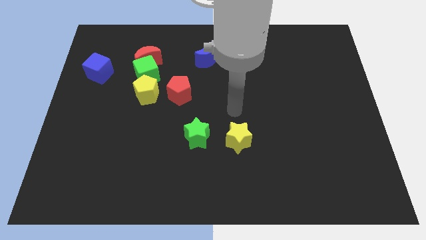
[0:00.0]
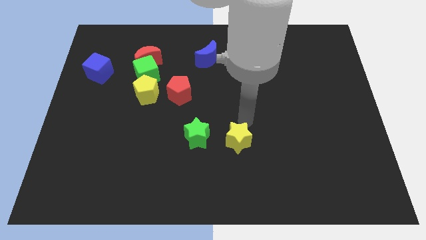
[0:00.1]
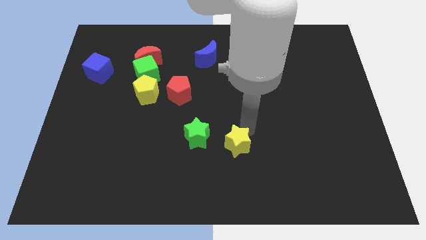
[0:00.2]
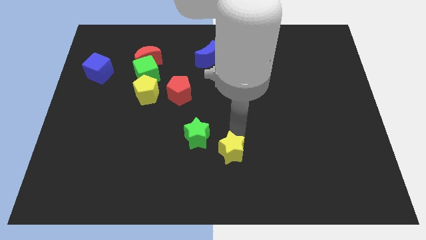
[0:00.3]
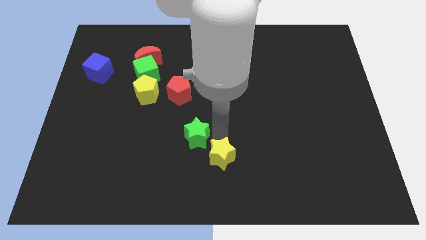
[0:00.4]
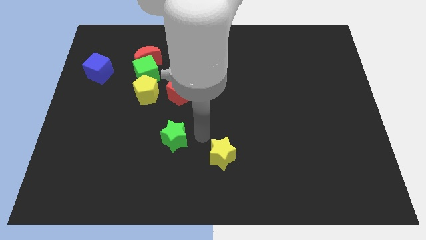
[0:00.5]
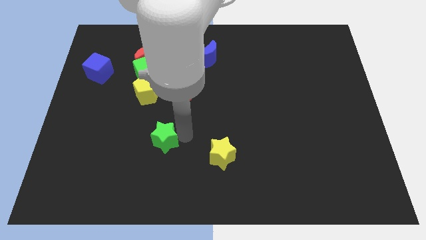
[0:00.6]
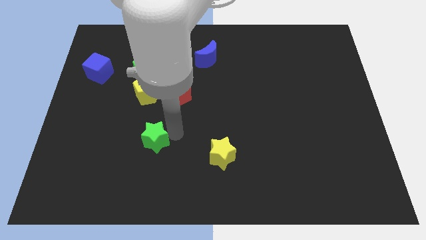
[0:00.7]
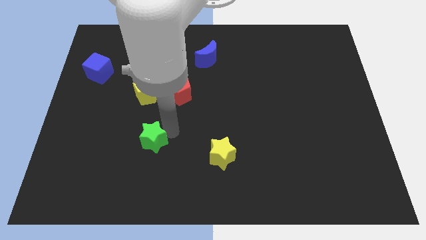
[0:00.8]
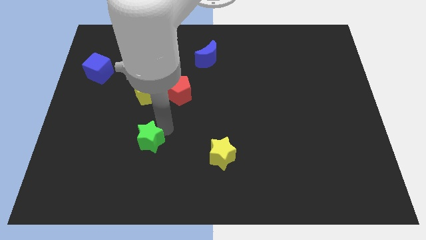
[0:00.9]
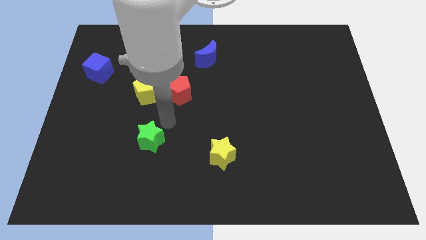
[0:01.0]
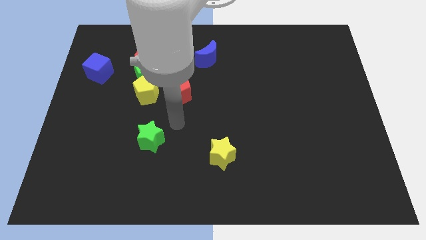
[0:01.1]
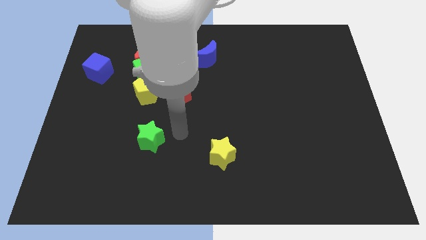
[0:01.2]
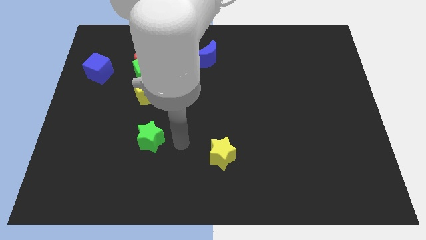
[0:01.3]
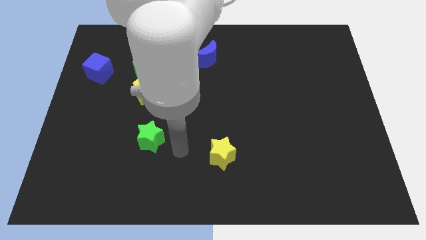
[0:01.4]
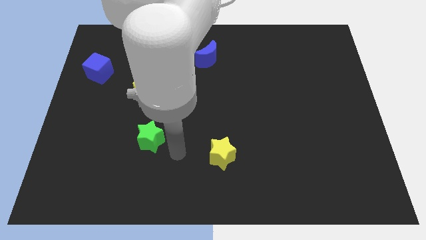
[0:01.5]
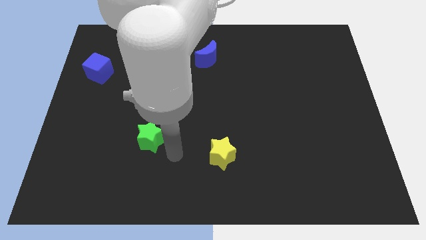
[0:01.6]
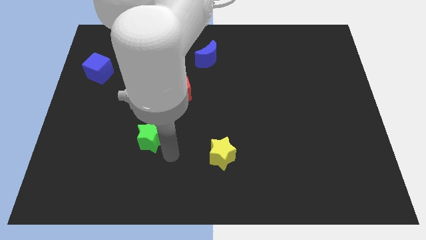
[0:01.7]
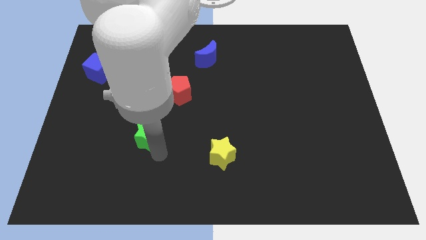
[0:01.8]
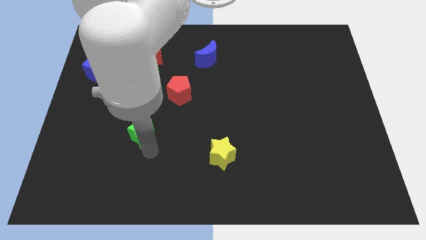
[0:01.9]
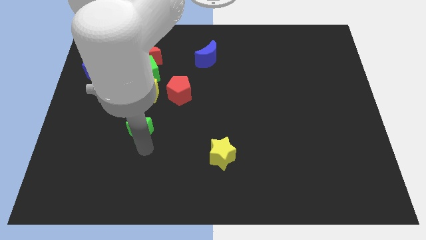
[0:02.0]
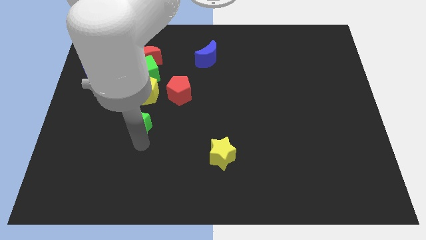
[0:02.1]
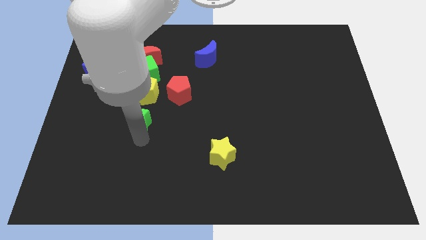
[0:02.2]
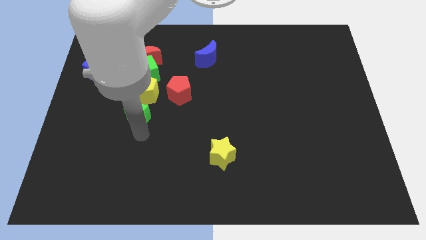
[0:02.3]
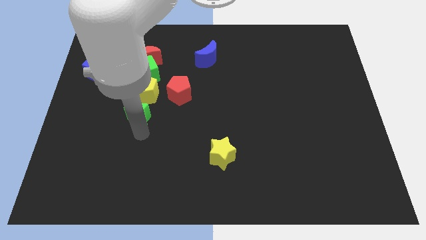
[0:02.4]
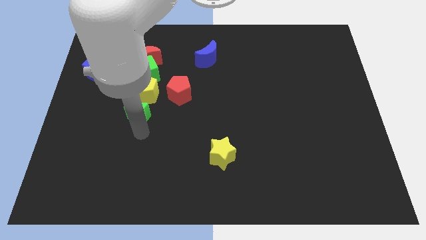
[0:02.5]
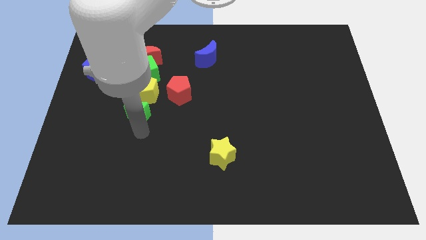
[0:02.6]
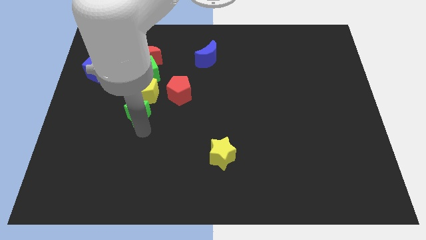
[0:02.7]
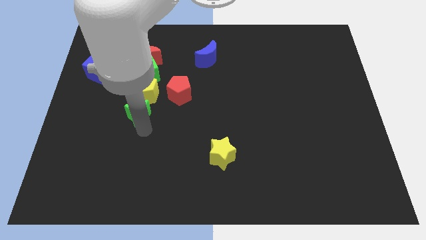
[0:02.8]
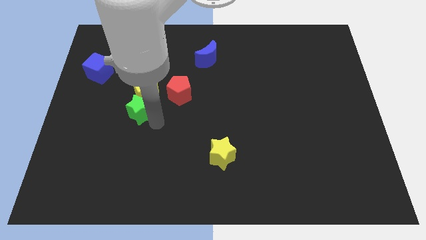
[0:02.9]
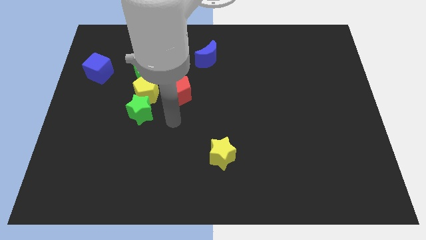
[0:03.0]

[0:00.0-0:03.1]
push green star below the yellow pentagon

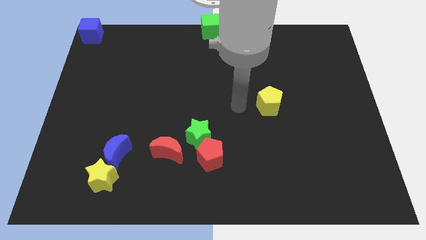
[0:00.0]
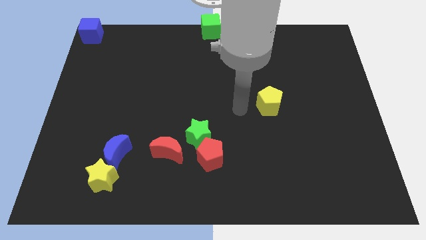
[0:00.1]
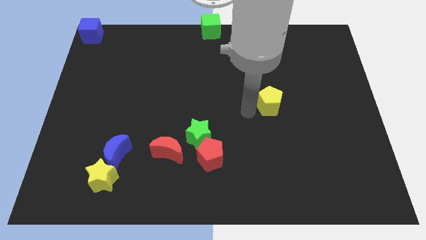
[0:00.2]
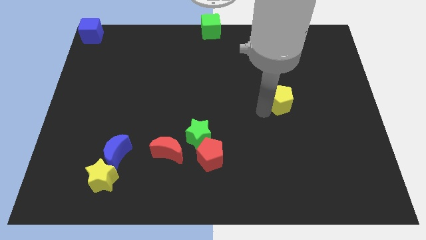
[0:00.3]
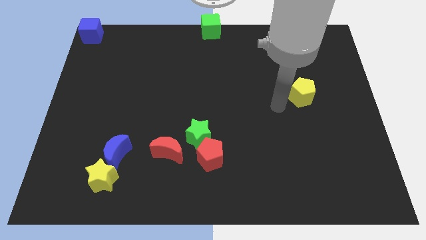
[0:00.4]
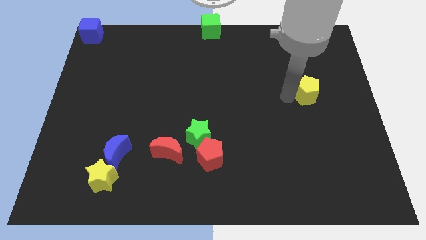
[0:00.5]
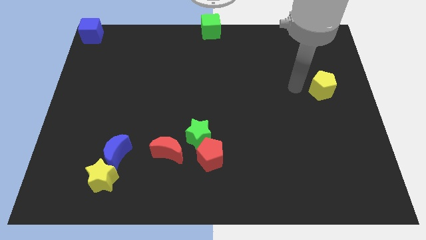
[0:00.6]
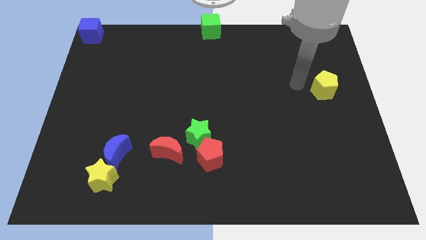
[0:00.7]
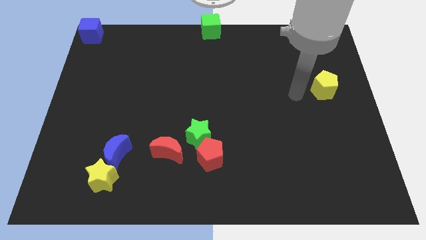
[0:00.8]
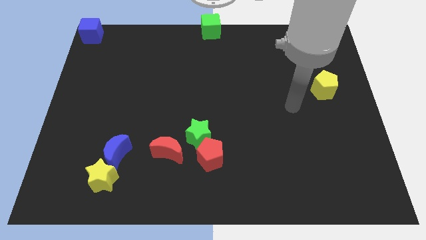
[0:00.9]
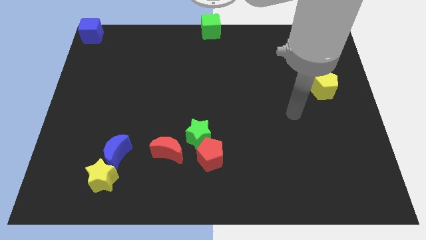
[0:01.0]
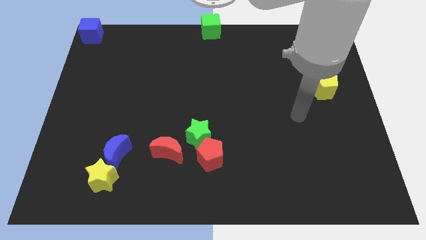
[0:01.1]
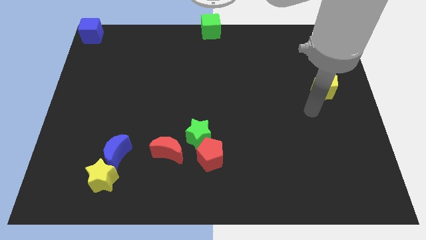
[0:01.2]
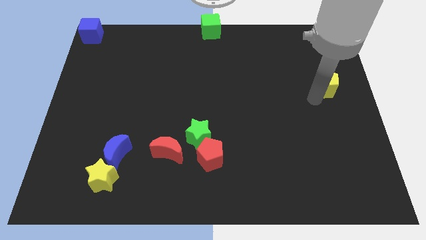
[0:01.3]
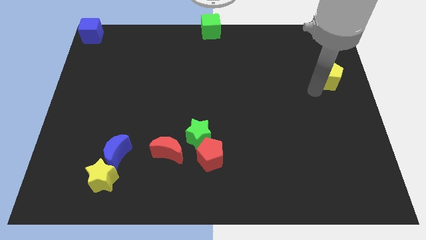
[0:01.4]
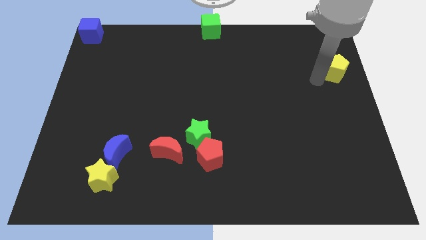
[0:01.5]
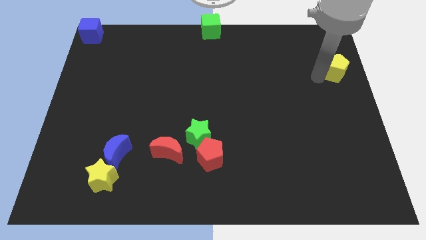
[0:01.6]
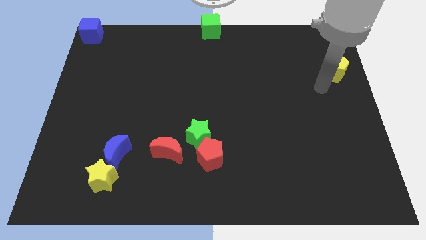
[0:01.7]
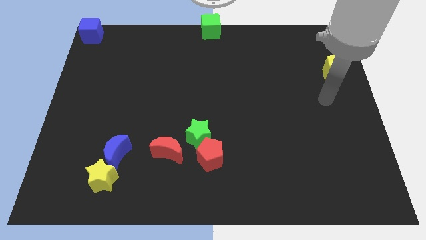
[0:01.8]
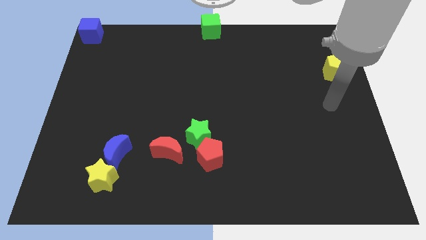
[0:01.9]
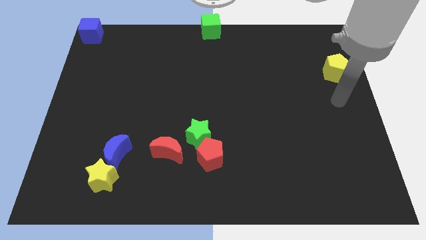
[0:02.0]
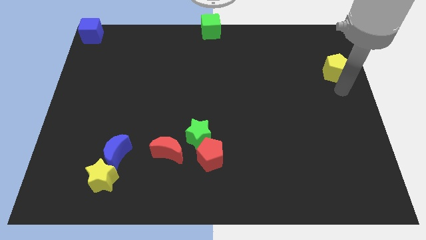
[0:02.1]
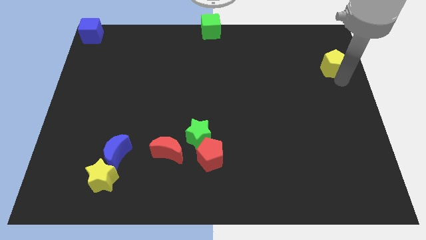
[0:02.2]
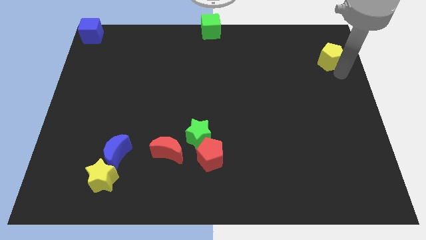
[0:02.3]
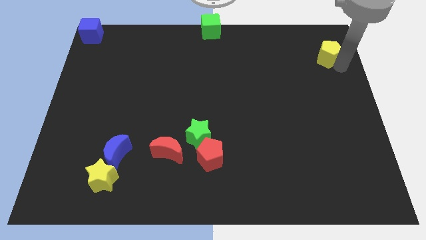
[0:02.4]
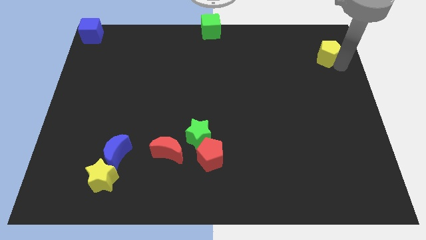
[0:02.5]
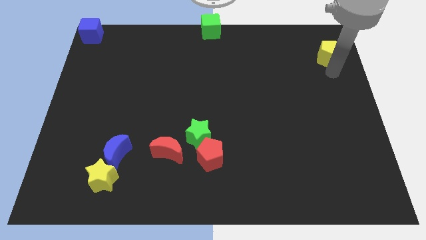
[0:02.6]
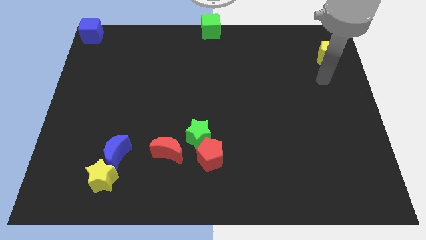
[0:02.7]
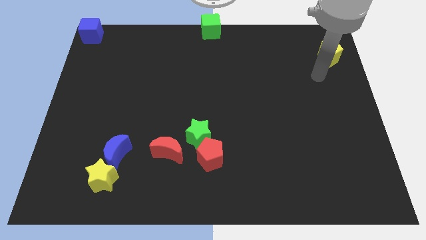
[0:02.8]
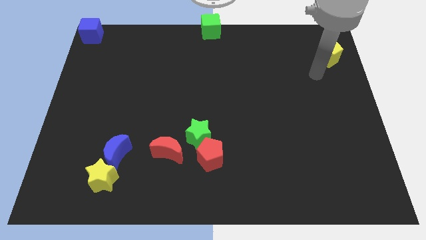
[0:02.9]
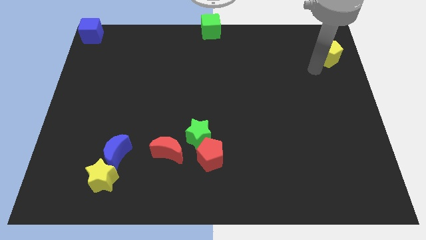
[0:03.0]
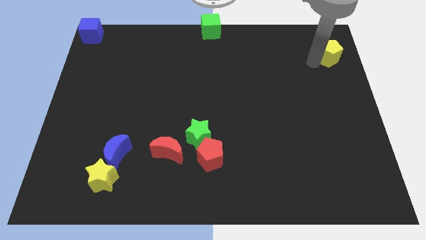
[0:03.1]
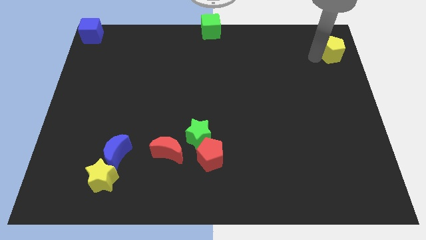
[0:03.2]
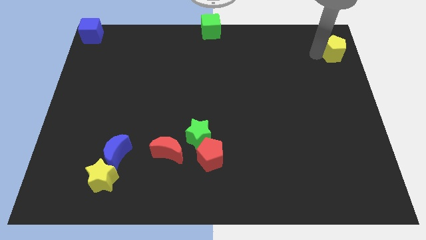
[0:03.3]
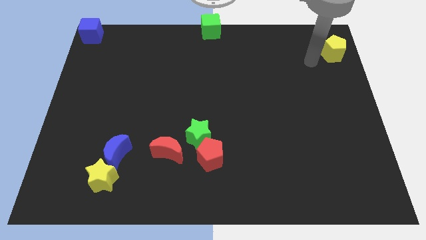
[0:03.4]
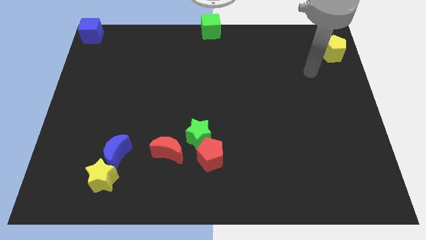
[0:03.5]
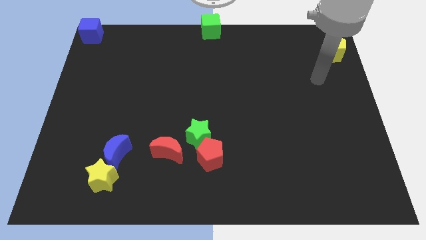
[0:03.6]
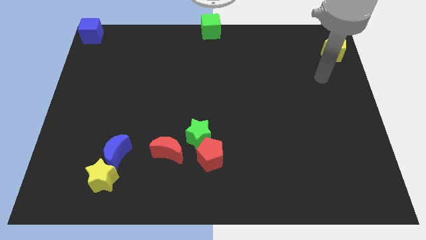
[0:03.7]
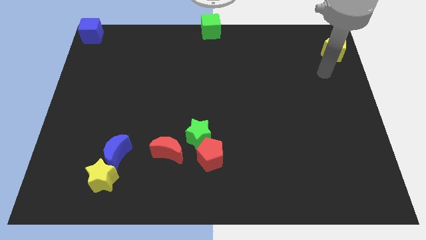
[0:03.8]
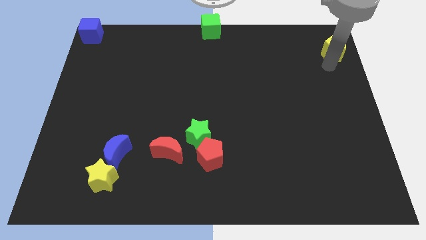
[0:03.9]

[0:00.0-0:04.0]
slide the yellow pentagon to the top right of the board

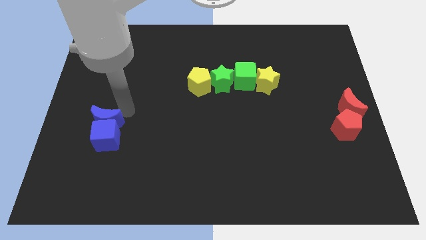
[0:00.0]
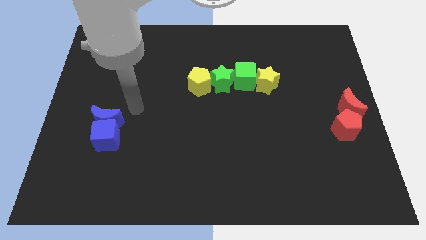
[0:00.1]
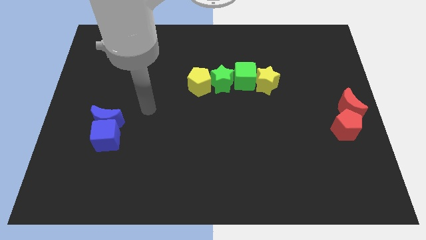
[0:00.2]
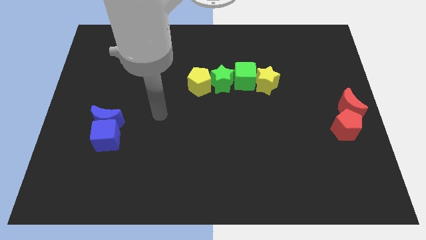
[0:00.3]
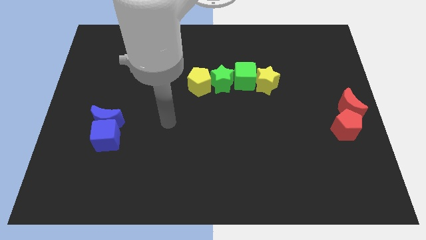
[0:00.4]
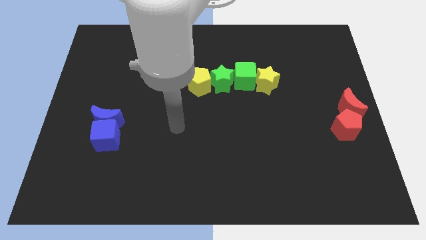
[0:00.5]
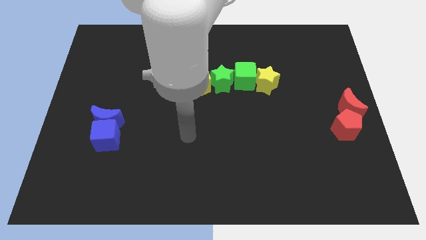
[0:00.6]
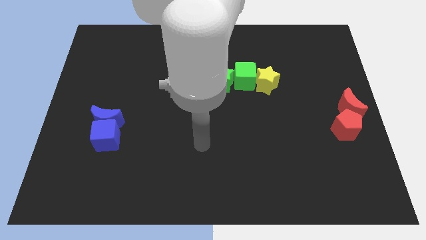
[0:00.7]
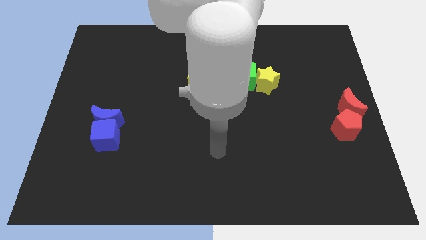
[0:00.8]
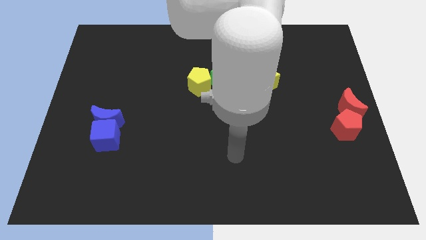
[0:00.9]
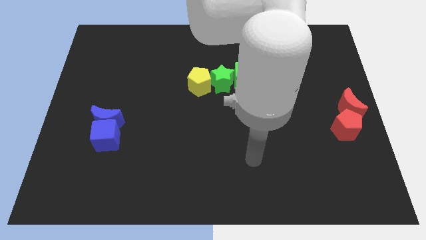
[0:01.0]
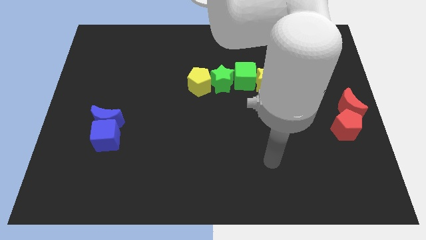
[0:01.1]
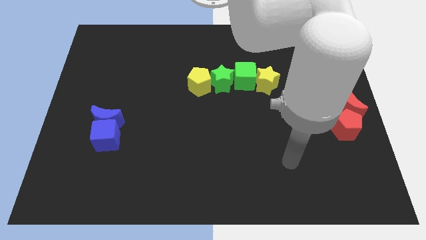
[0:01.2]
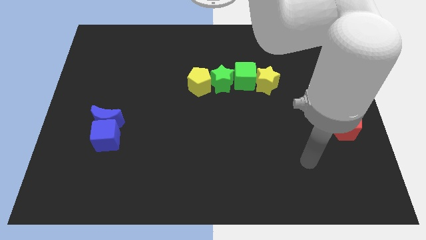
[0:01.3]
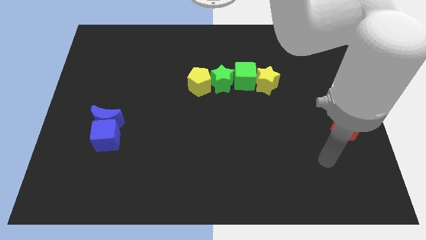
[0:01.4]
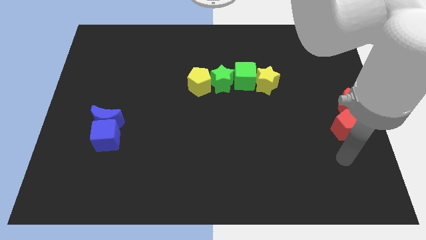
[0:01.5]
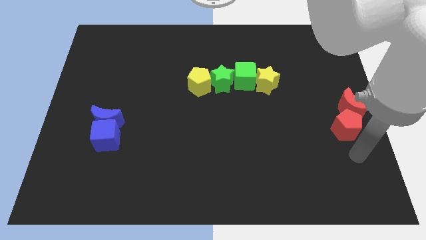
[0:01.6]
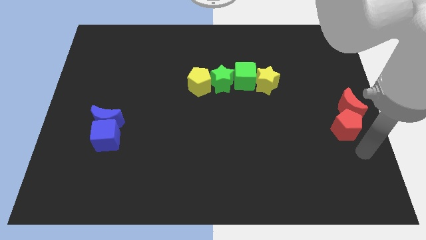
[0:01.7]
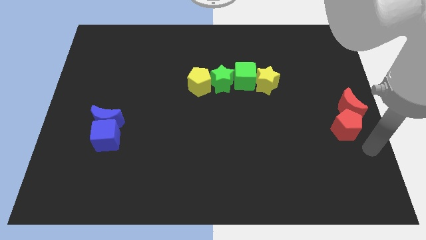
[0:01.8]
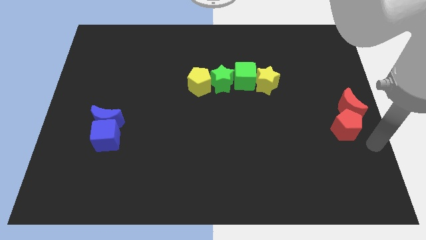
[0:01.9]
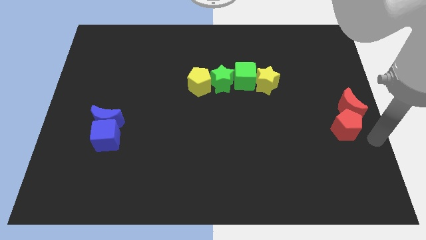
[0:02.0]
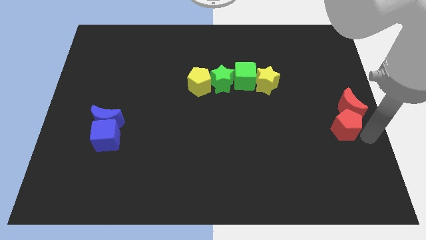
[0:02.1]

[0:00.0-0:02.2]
move your arm away from the blue moon
